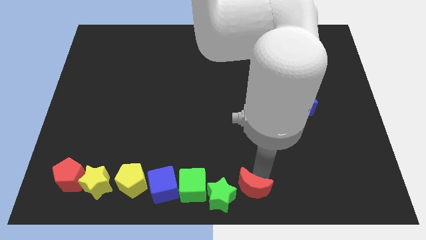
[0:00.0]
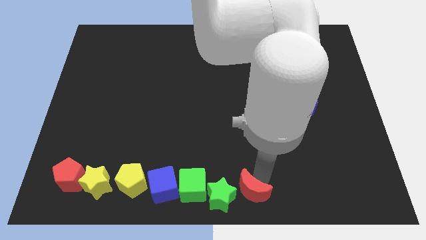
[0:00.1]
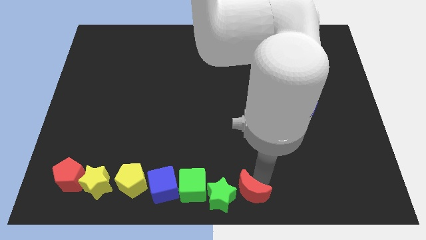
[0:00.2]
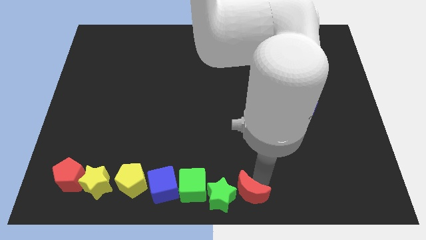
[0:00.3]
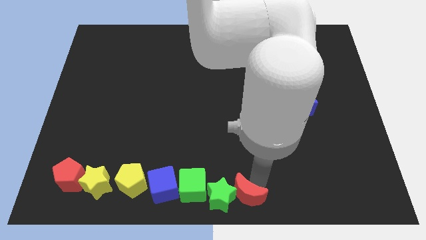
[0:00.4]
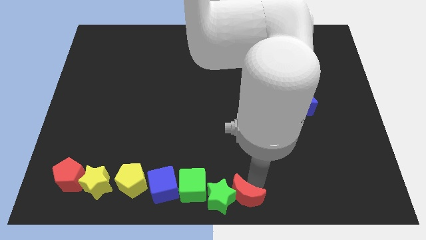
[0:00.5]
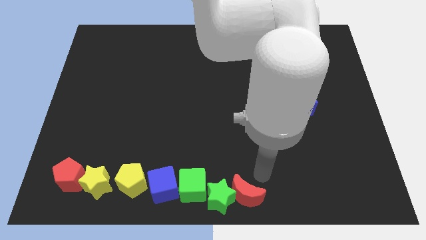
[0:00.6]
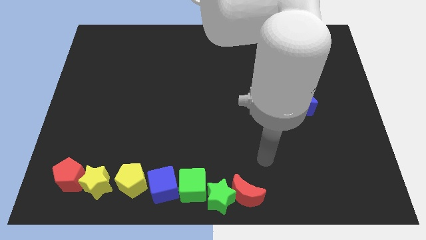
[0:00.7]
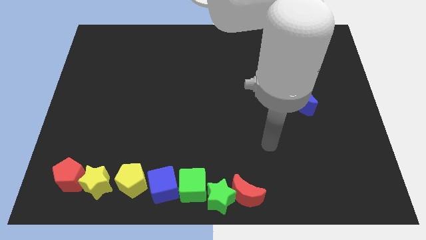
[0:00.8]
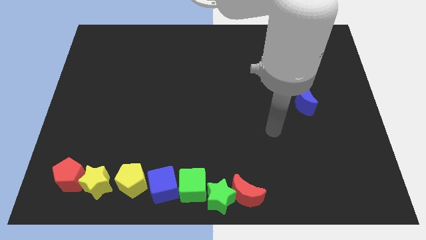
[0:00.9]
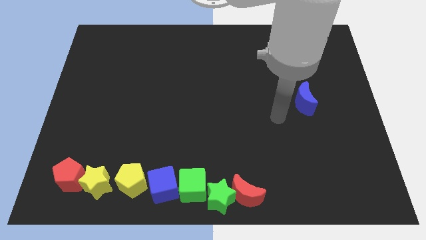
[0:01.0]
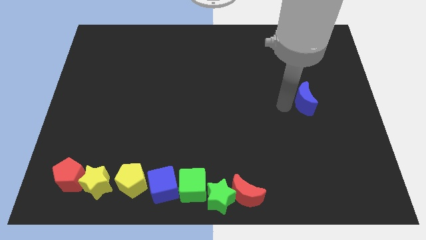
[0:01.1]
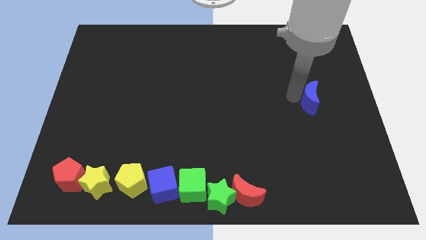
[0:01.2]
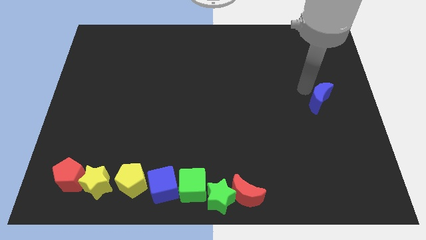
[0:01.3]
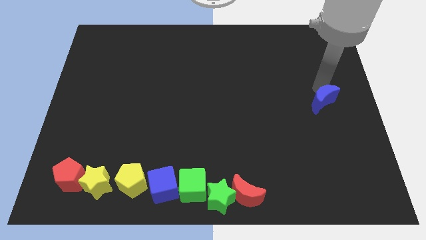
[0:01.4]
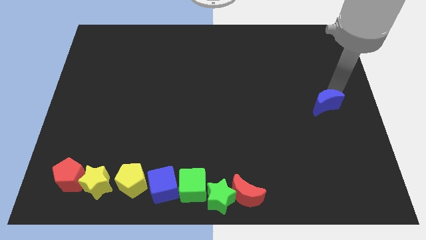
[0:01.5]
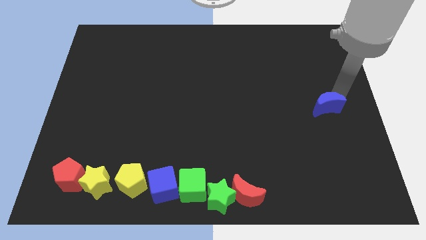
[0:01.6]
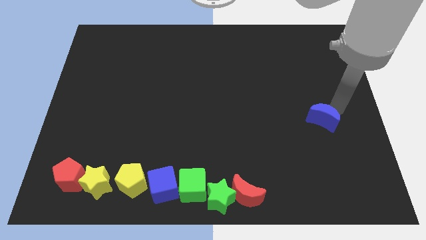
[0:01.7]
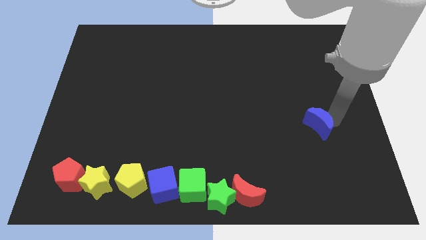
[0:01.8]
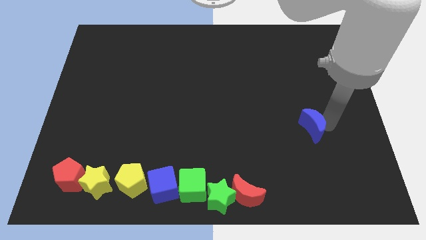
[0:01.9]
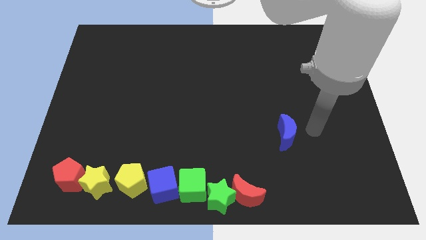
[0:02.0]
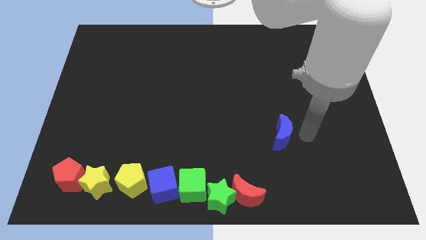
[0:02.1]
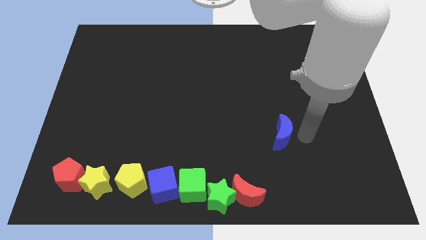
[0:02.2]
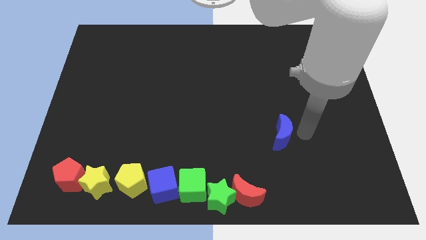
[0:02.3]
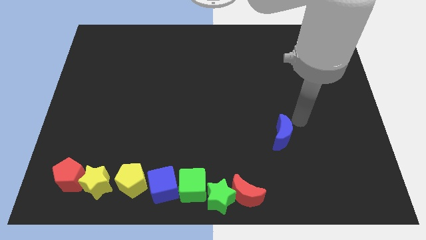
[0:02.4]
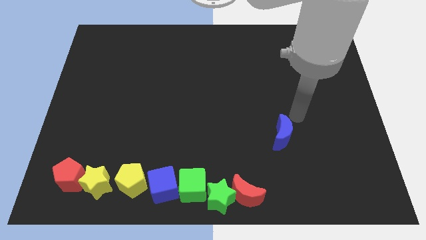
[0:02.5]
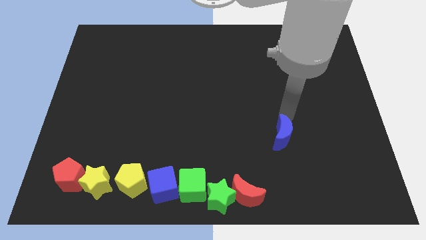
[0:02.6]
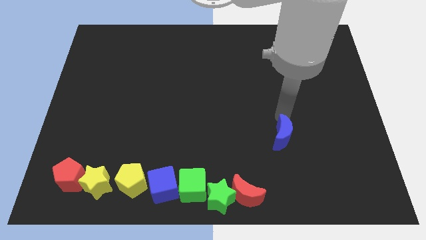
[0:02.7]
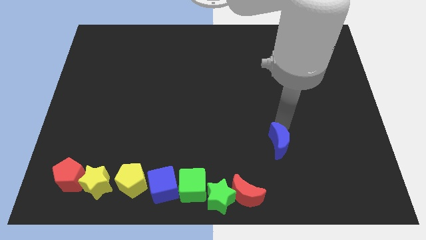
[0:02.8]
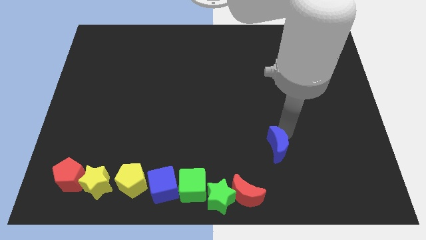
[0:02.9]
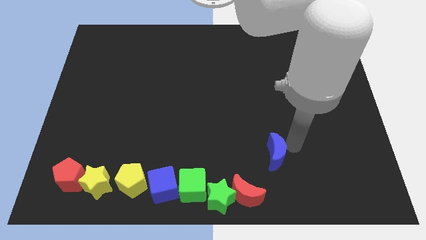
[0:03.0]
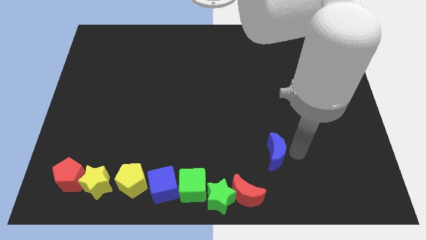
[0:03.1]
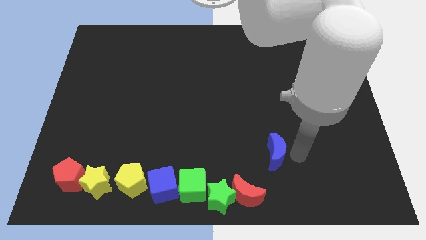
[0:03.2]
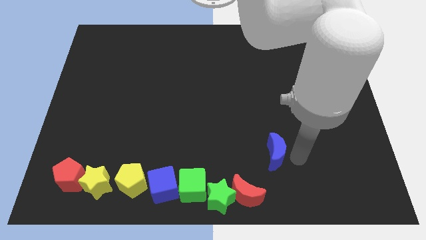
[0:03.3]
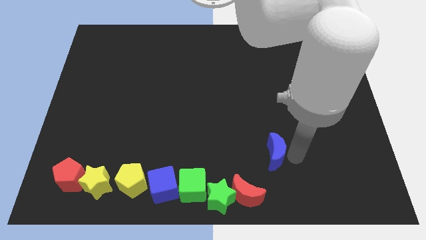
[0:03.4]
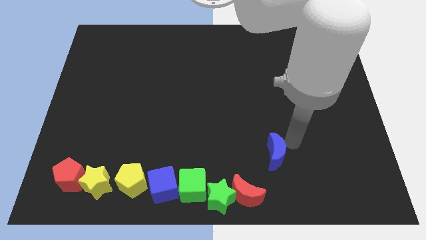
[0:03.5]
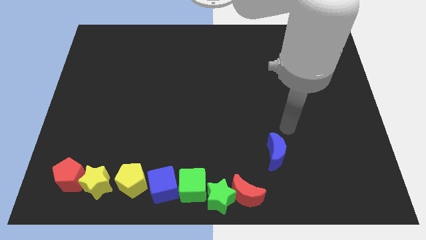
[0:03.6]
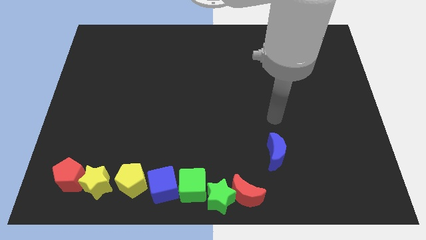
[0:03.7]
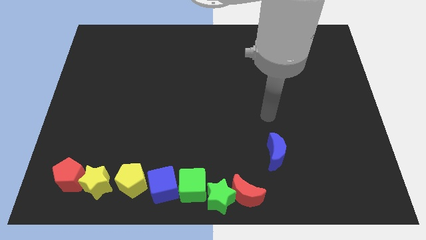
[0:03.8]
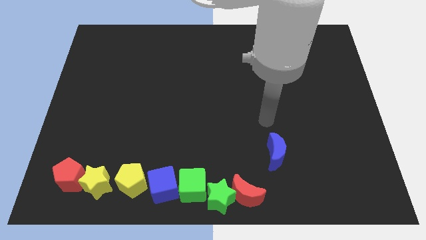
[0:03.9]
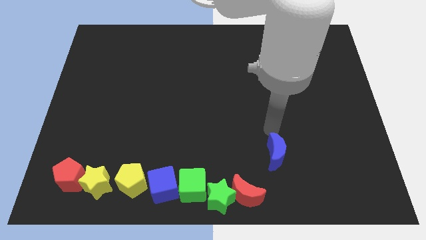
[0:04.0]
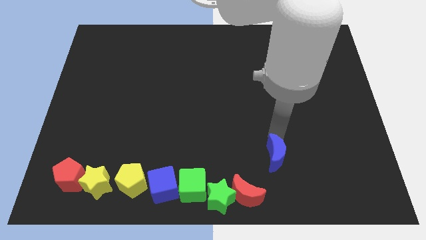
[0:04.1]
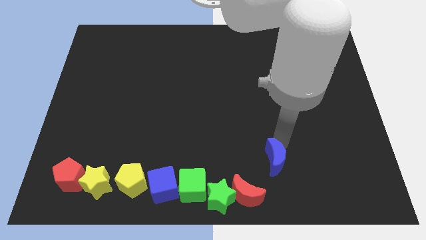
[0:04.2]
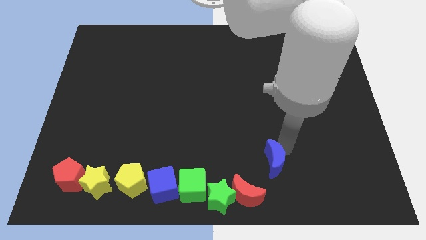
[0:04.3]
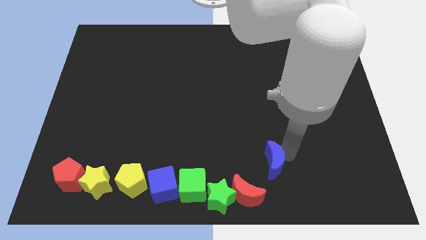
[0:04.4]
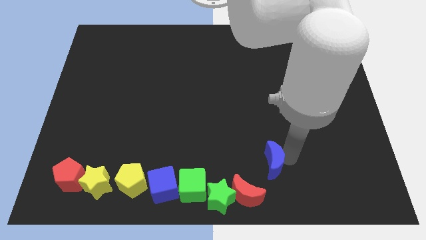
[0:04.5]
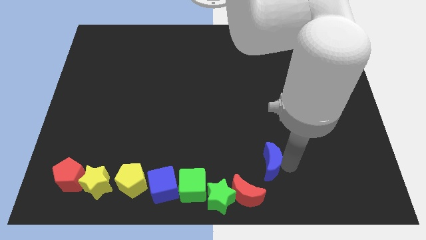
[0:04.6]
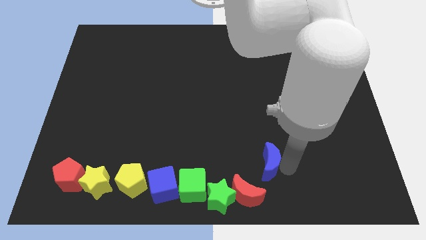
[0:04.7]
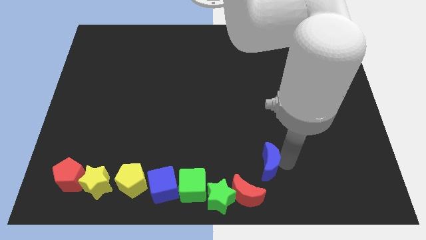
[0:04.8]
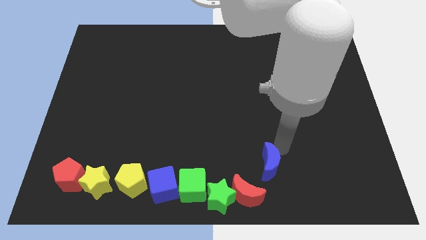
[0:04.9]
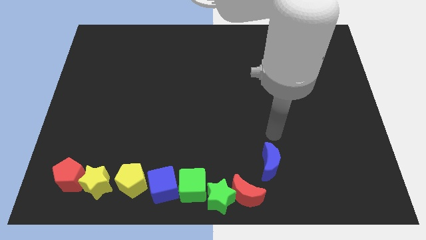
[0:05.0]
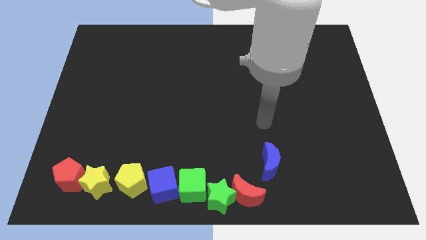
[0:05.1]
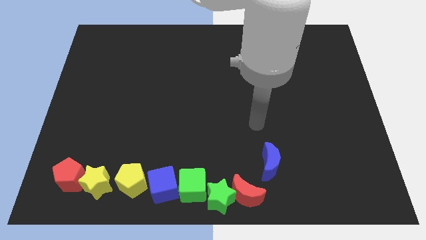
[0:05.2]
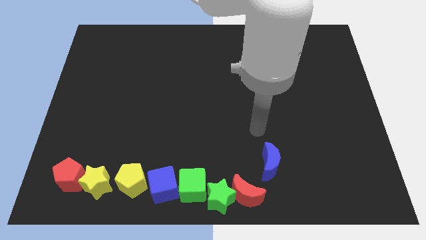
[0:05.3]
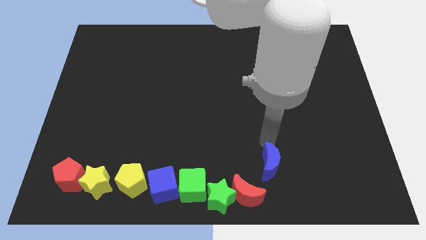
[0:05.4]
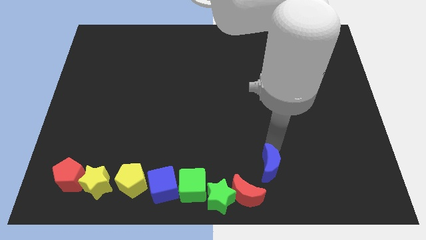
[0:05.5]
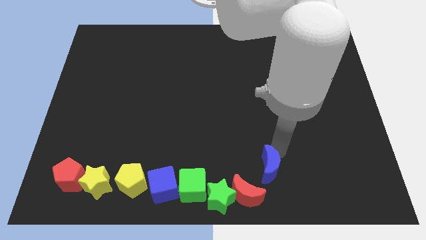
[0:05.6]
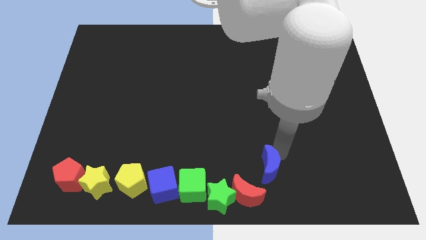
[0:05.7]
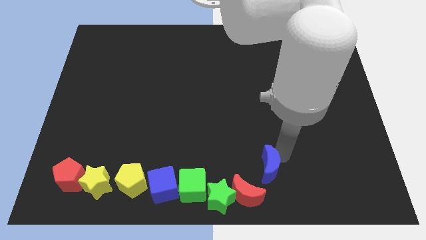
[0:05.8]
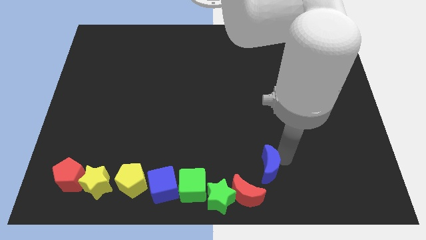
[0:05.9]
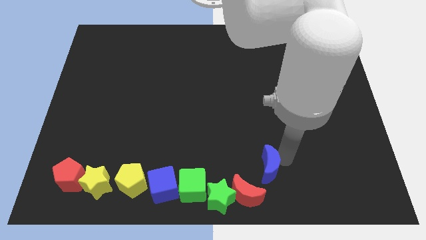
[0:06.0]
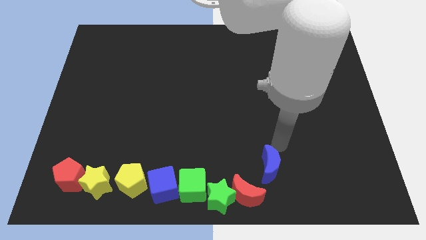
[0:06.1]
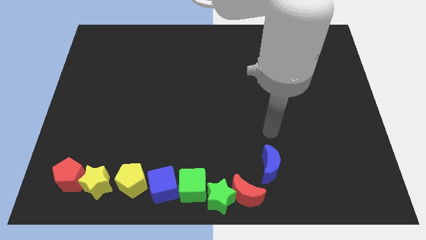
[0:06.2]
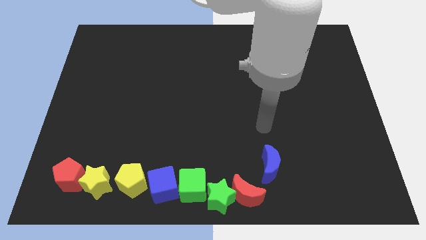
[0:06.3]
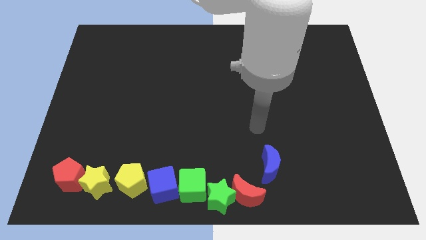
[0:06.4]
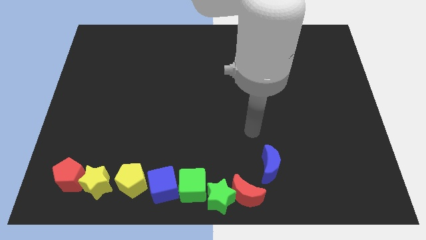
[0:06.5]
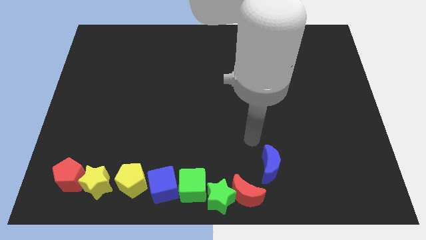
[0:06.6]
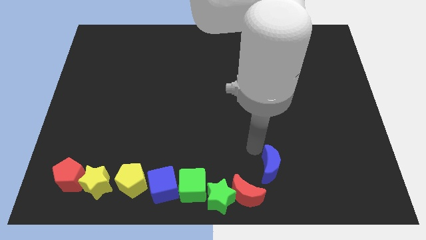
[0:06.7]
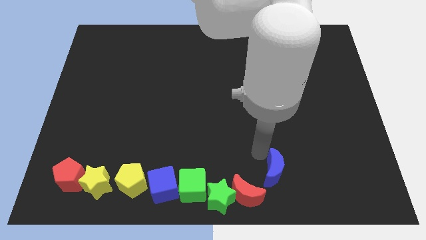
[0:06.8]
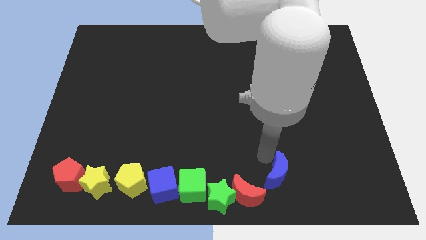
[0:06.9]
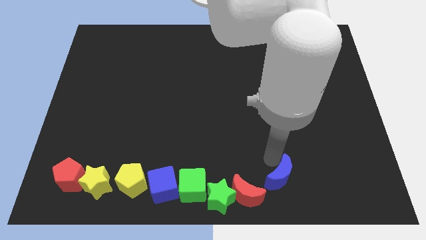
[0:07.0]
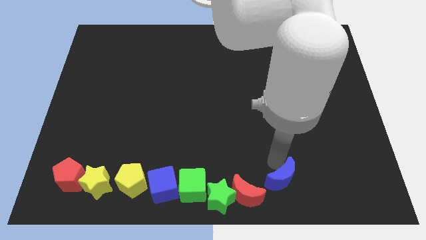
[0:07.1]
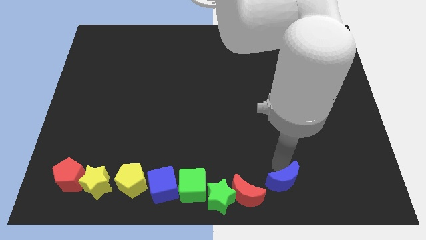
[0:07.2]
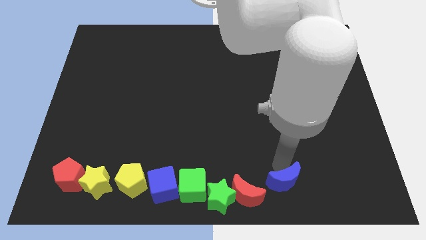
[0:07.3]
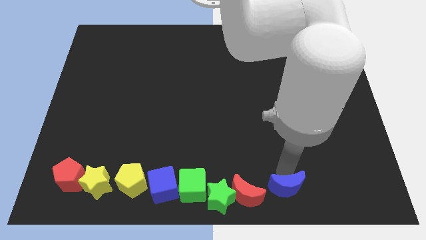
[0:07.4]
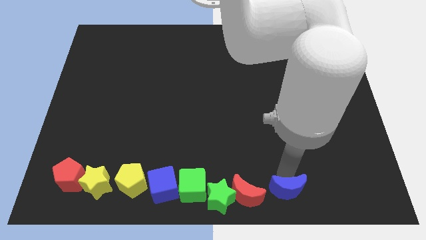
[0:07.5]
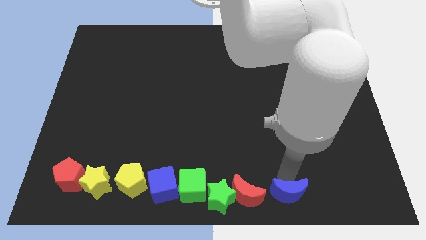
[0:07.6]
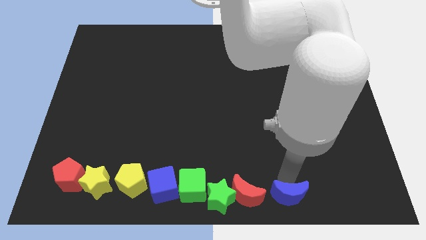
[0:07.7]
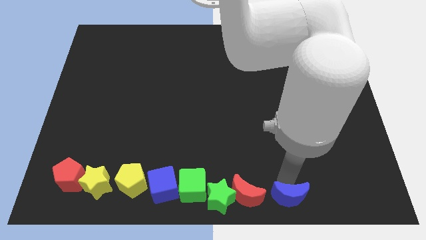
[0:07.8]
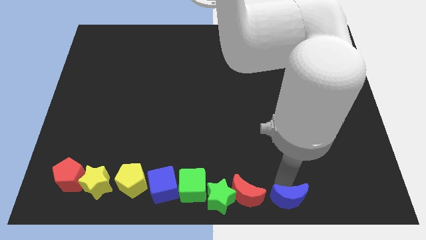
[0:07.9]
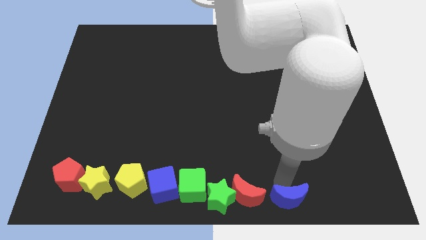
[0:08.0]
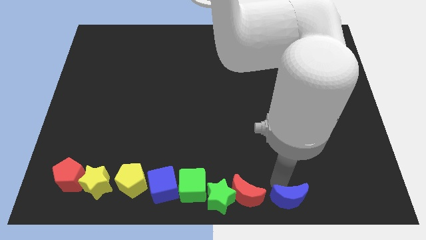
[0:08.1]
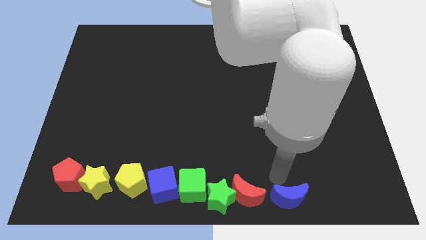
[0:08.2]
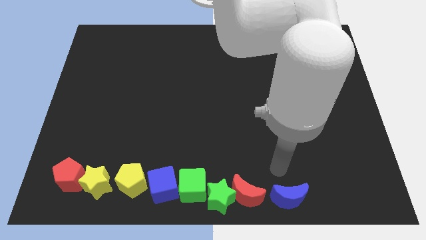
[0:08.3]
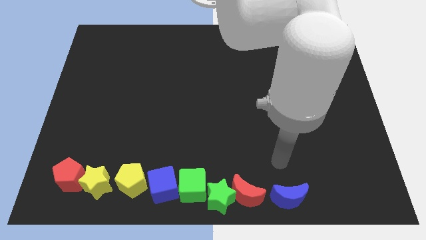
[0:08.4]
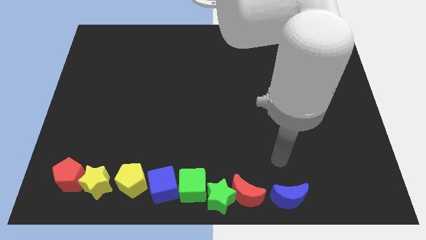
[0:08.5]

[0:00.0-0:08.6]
push the two crescents to the right side of the green star

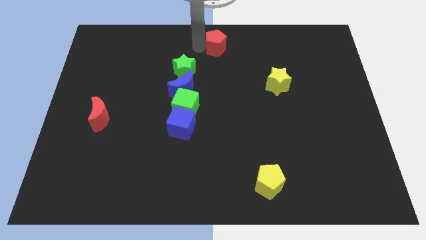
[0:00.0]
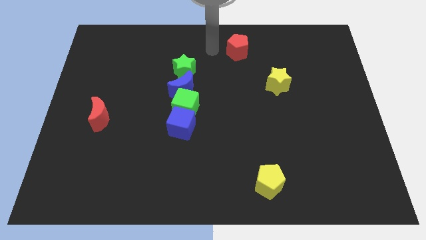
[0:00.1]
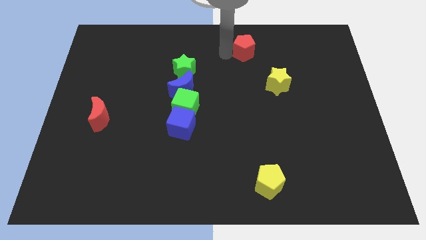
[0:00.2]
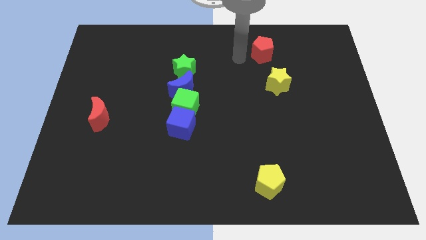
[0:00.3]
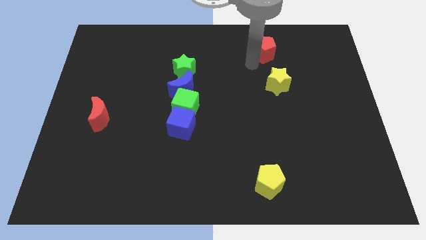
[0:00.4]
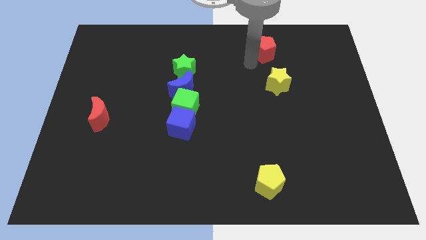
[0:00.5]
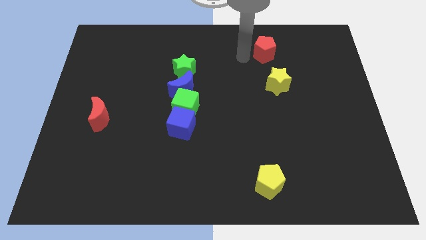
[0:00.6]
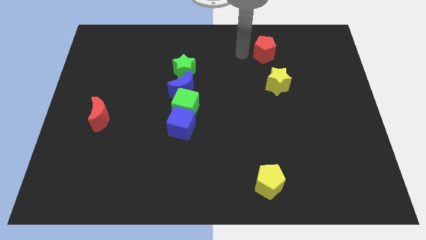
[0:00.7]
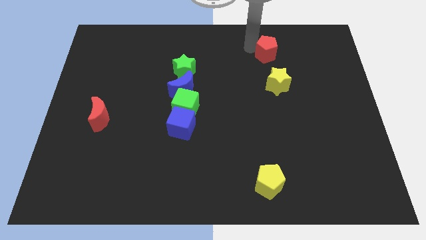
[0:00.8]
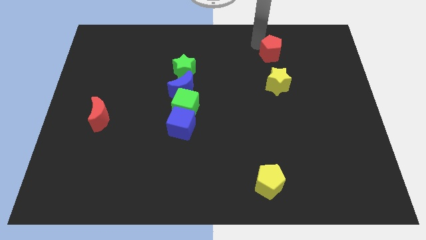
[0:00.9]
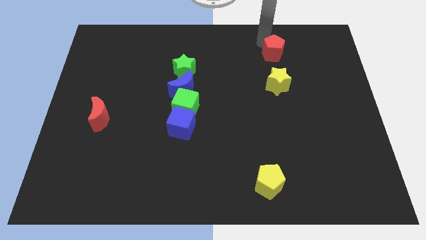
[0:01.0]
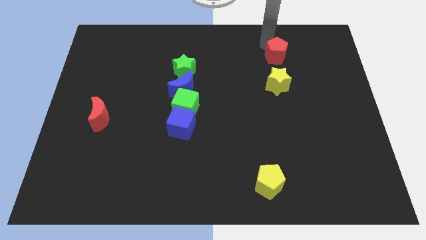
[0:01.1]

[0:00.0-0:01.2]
push the red pentagon to the top of the yellow star
